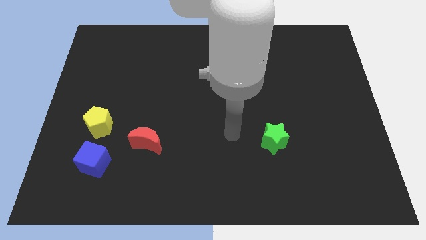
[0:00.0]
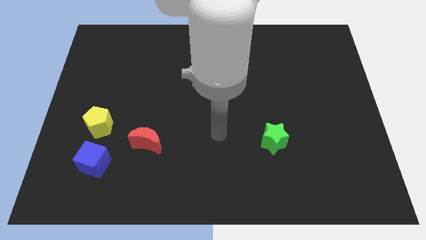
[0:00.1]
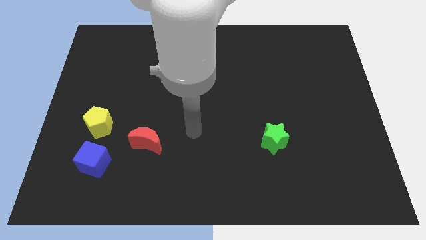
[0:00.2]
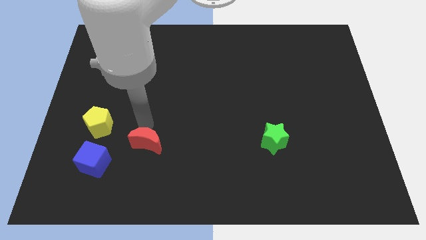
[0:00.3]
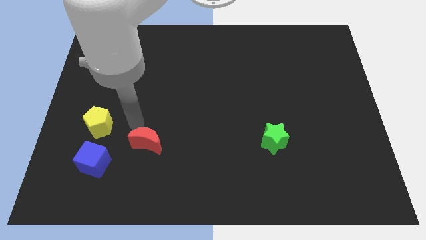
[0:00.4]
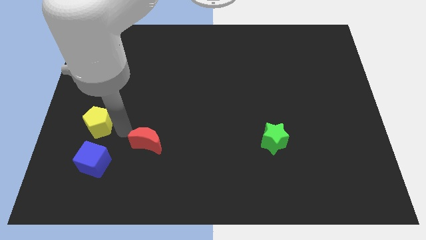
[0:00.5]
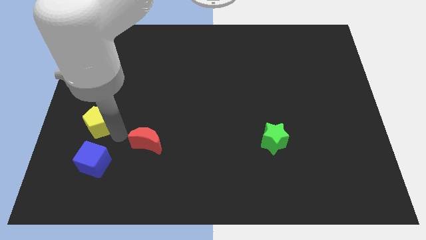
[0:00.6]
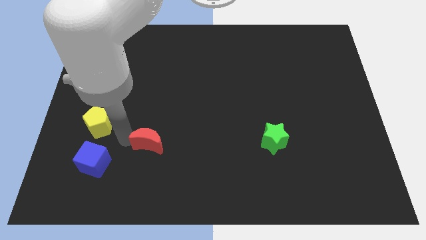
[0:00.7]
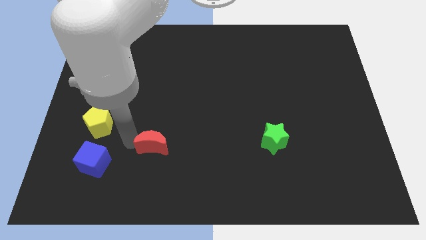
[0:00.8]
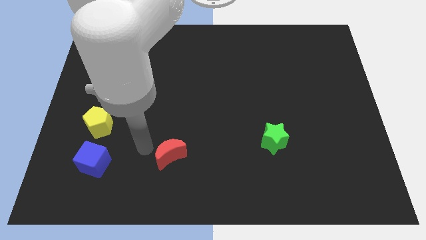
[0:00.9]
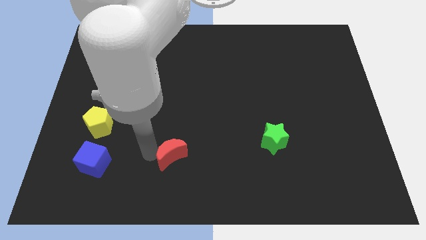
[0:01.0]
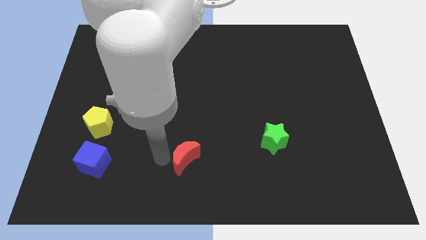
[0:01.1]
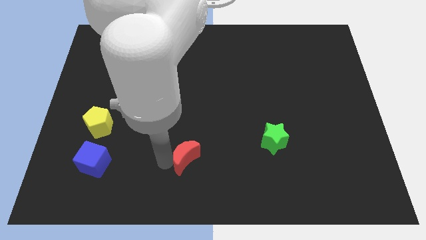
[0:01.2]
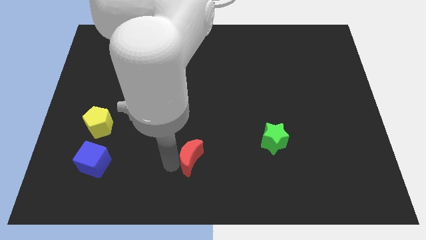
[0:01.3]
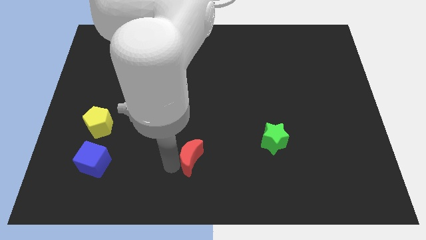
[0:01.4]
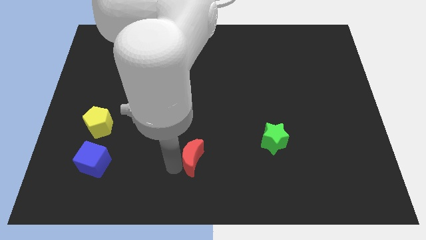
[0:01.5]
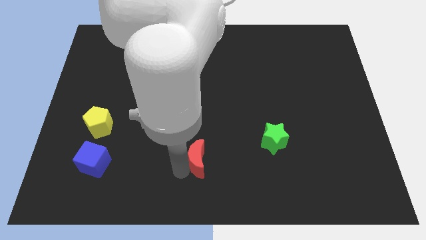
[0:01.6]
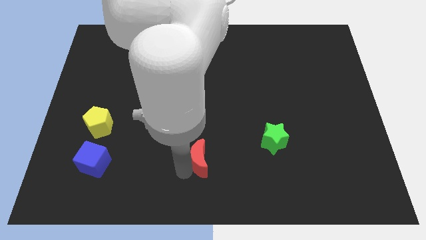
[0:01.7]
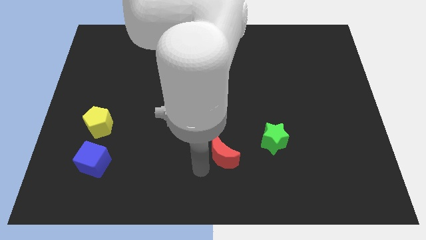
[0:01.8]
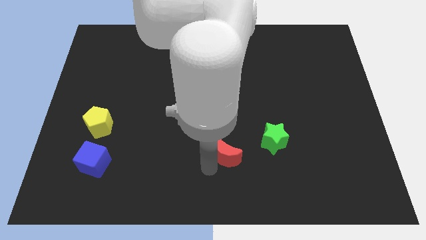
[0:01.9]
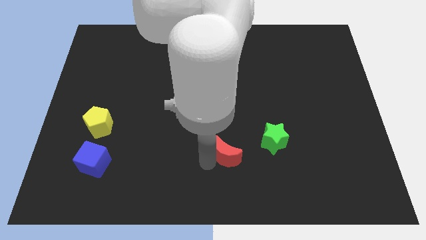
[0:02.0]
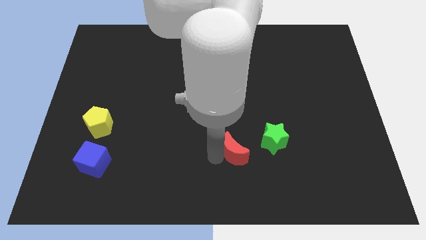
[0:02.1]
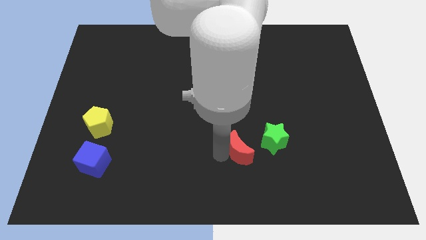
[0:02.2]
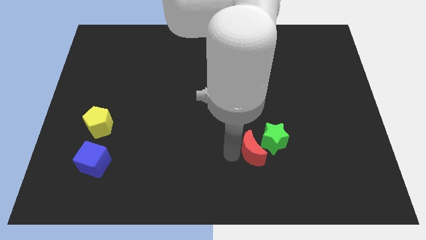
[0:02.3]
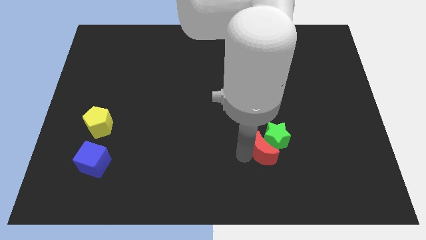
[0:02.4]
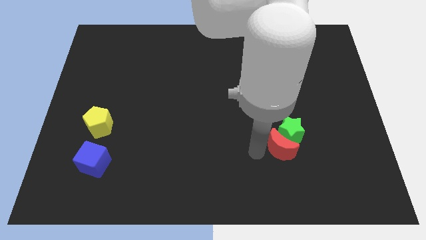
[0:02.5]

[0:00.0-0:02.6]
move the red block to the green block

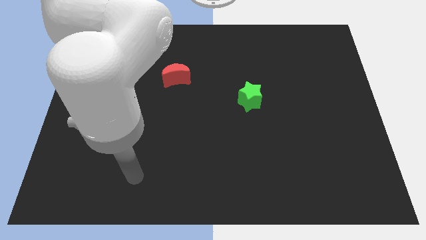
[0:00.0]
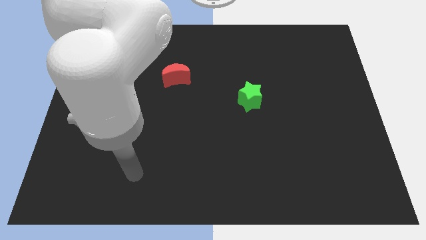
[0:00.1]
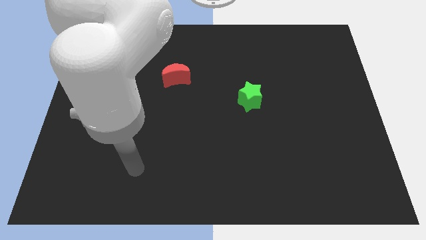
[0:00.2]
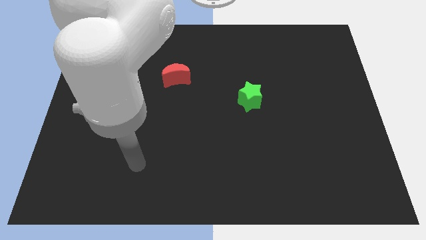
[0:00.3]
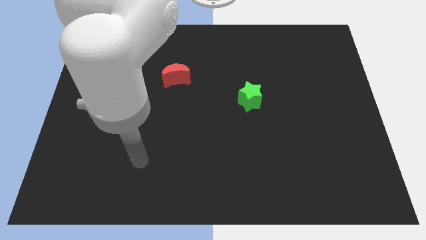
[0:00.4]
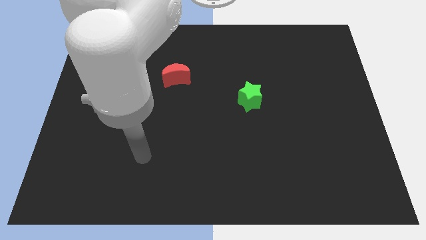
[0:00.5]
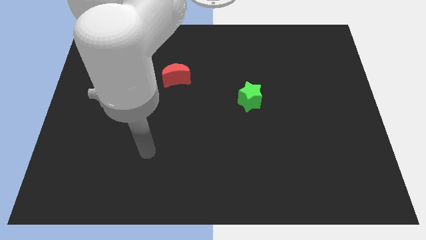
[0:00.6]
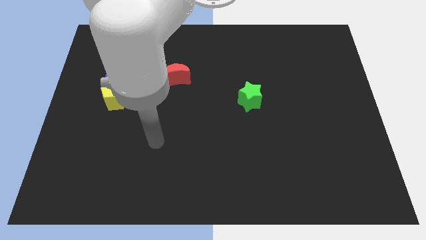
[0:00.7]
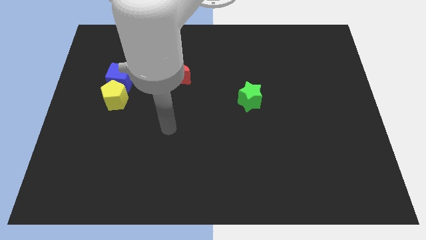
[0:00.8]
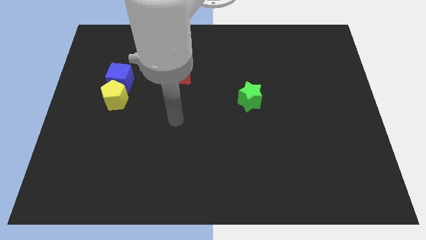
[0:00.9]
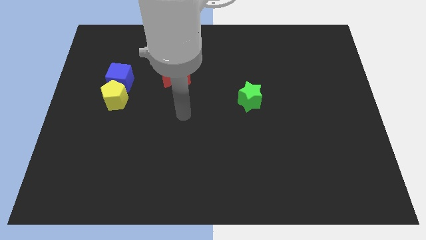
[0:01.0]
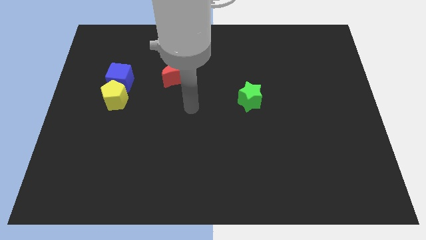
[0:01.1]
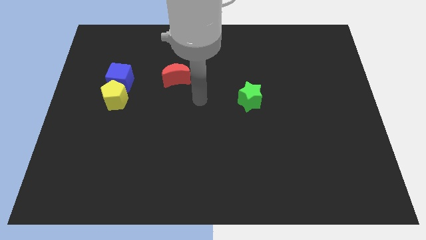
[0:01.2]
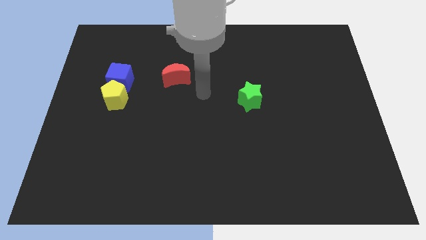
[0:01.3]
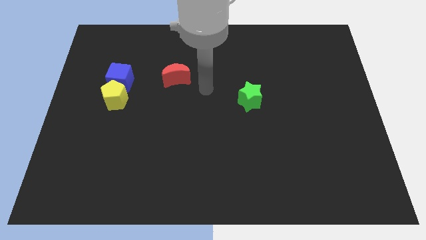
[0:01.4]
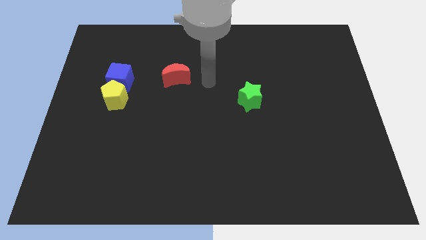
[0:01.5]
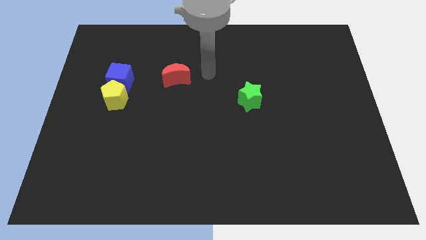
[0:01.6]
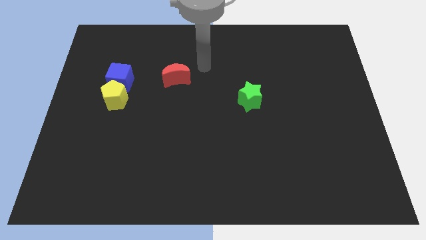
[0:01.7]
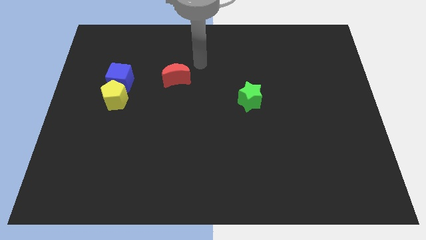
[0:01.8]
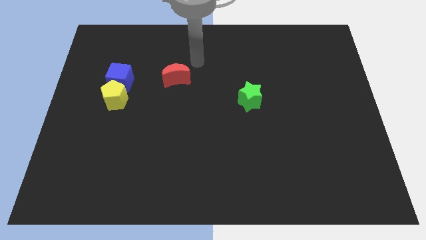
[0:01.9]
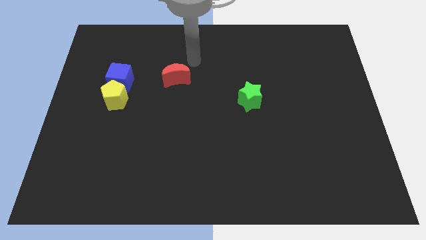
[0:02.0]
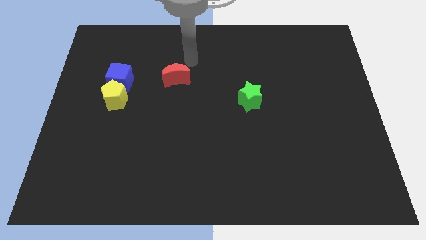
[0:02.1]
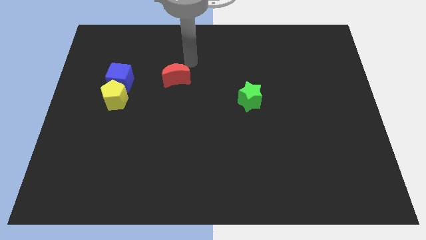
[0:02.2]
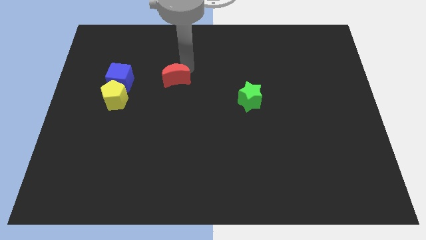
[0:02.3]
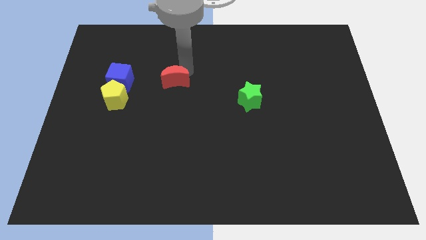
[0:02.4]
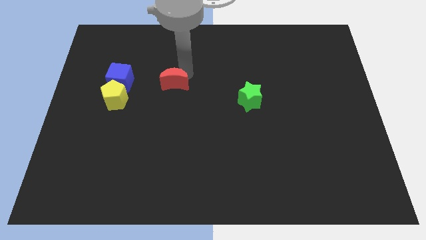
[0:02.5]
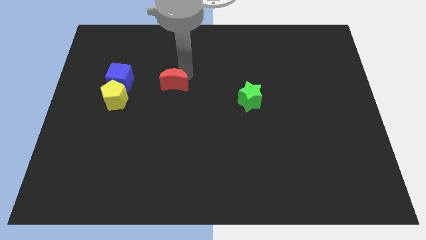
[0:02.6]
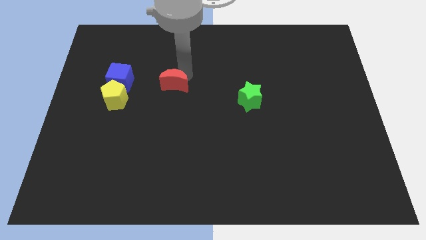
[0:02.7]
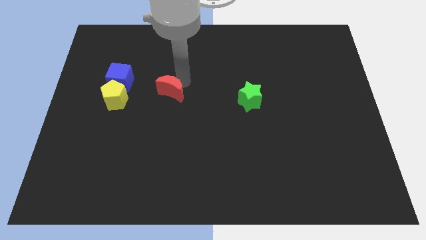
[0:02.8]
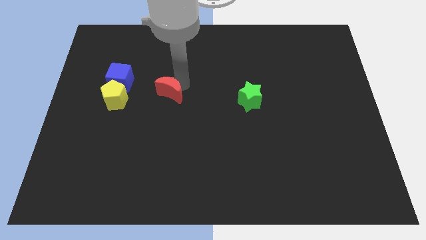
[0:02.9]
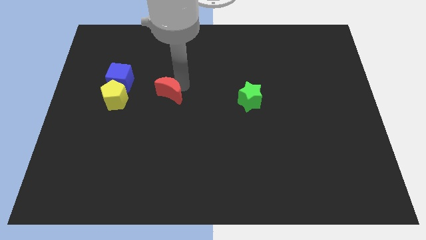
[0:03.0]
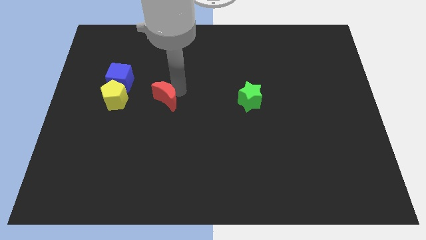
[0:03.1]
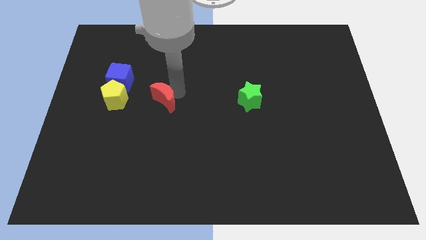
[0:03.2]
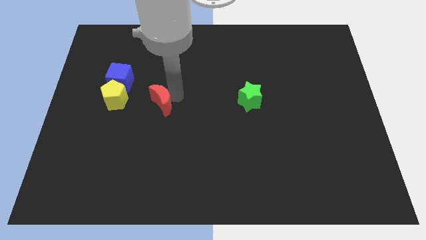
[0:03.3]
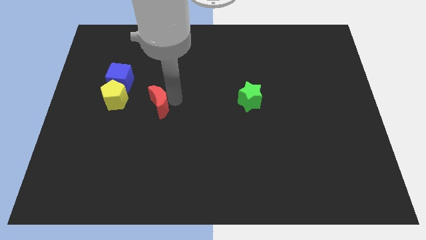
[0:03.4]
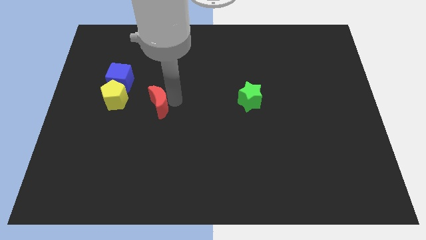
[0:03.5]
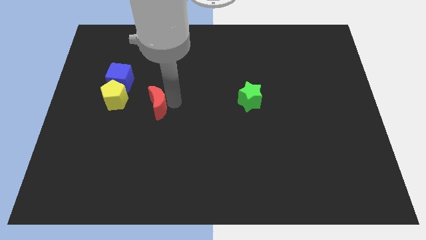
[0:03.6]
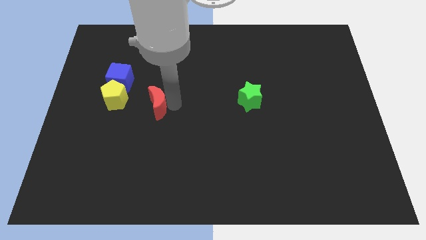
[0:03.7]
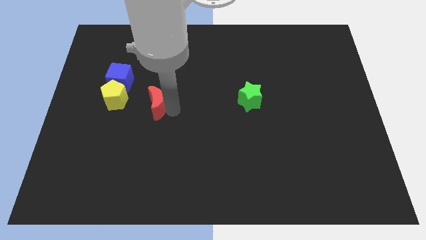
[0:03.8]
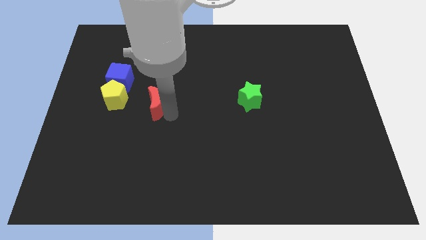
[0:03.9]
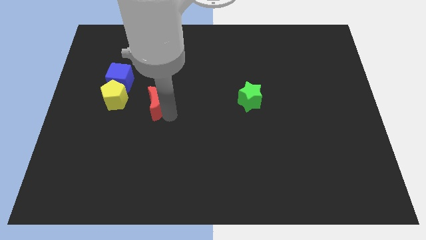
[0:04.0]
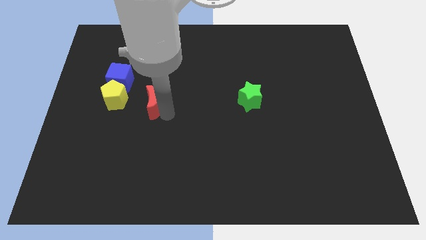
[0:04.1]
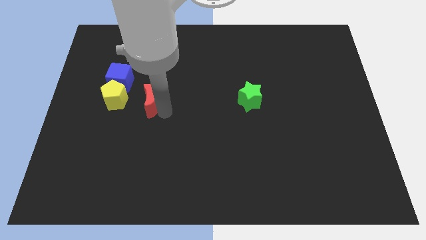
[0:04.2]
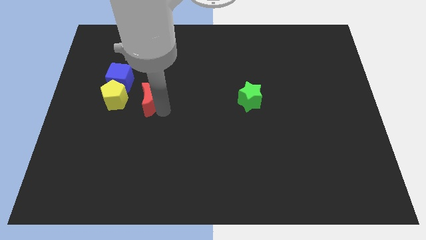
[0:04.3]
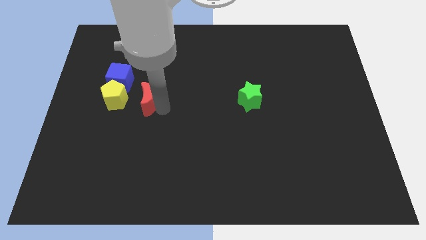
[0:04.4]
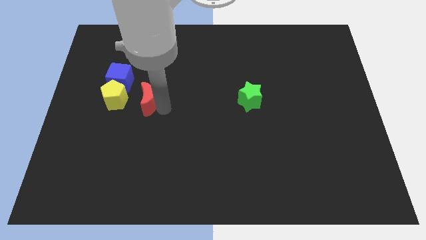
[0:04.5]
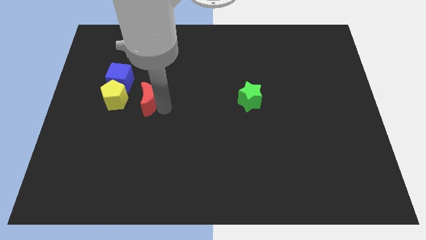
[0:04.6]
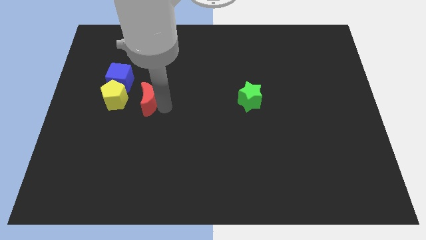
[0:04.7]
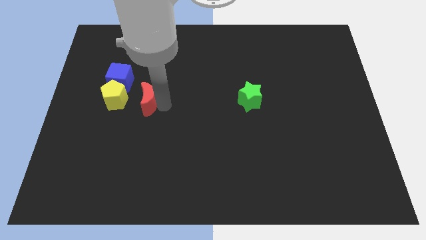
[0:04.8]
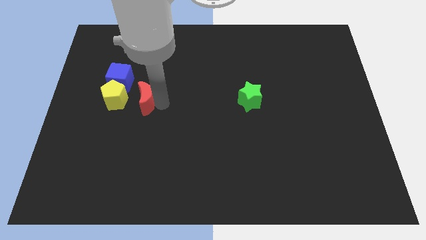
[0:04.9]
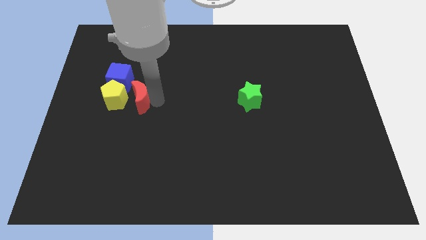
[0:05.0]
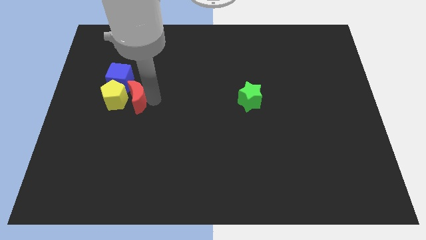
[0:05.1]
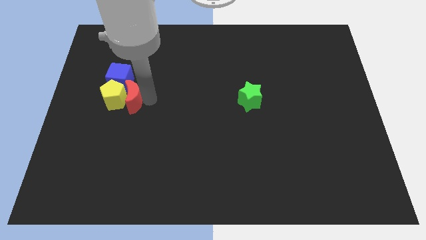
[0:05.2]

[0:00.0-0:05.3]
put the red moon to the yellow block

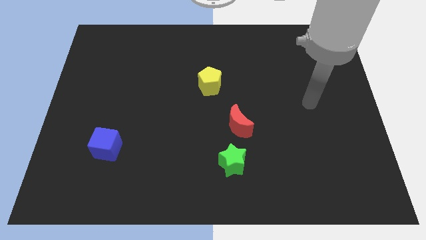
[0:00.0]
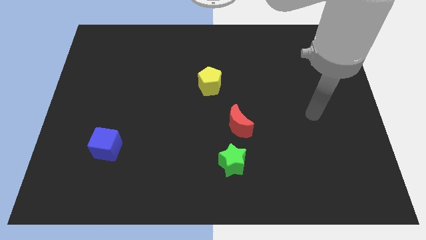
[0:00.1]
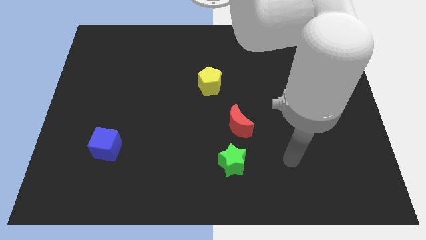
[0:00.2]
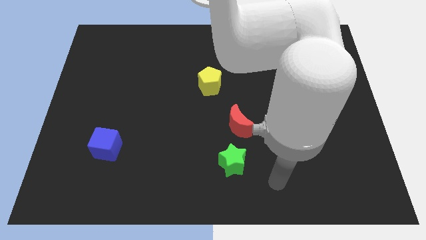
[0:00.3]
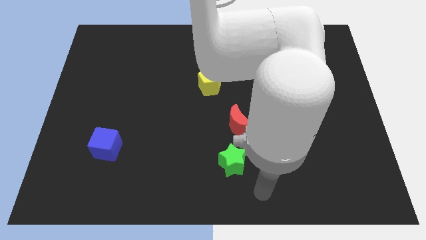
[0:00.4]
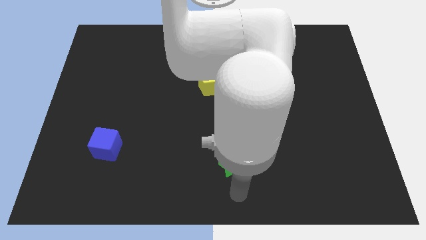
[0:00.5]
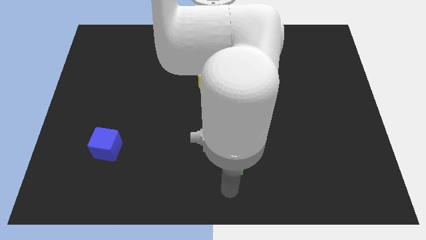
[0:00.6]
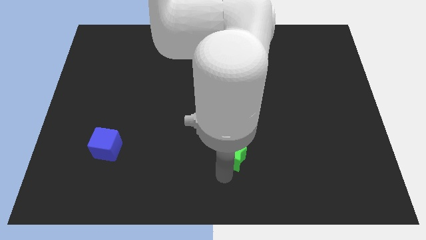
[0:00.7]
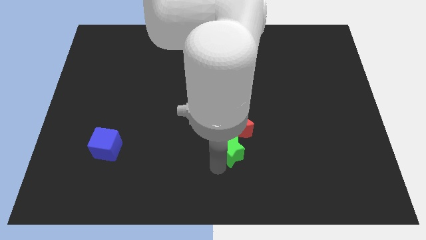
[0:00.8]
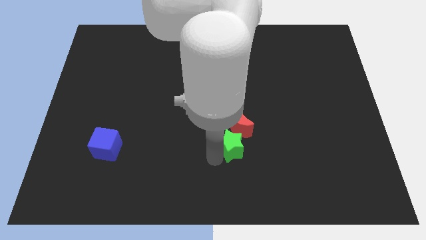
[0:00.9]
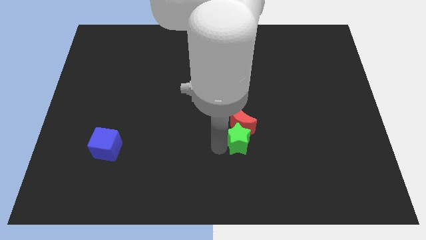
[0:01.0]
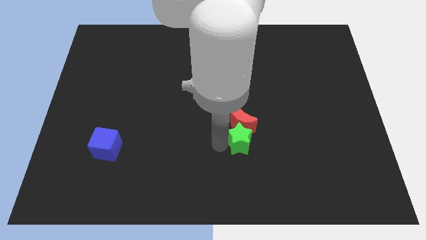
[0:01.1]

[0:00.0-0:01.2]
slide the green star to the moon
